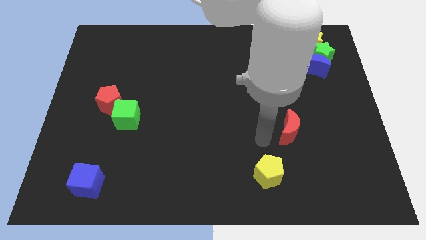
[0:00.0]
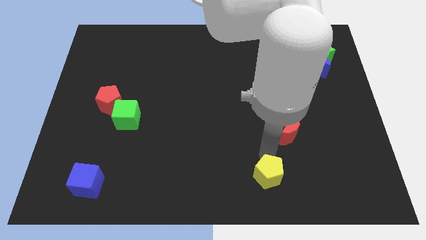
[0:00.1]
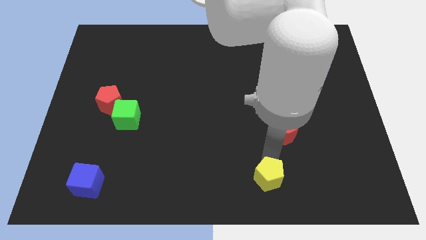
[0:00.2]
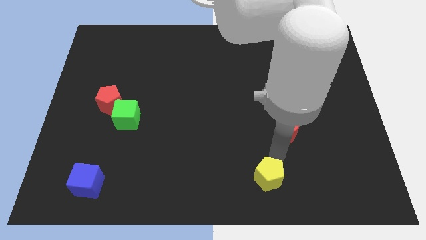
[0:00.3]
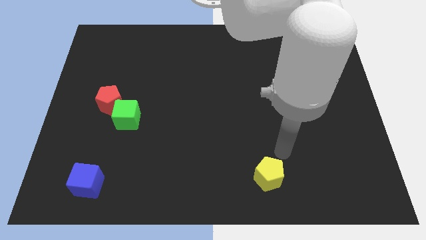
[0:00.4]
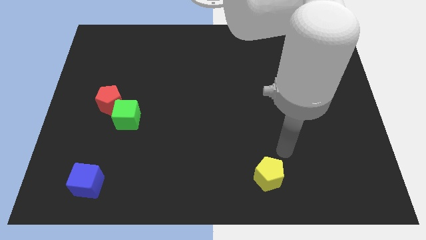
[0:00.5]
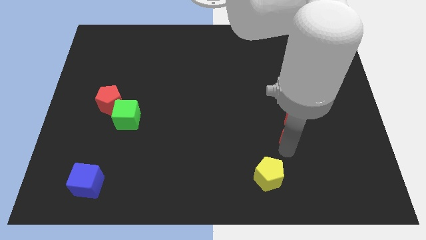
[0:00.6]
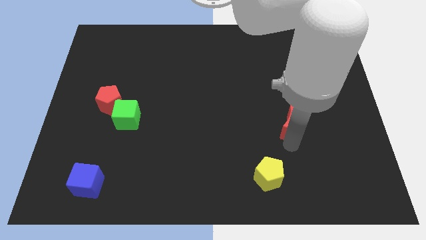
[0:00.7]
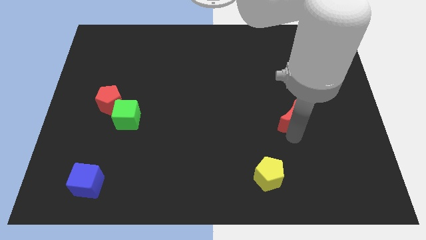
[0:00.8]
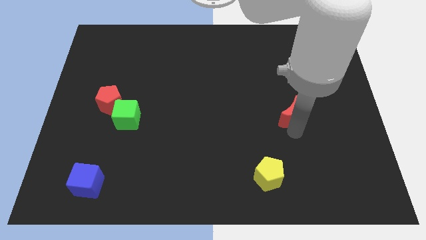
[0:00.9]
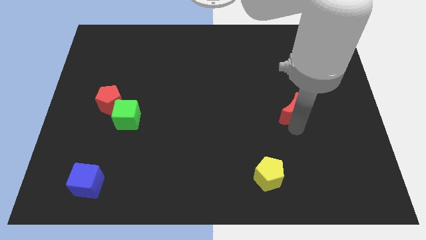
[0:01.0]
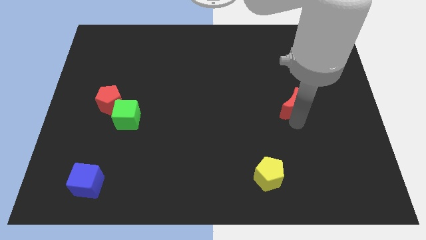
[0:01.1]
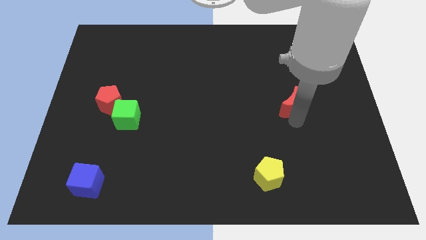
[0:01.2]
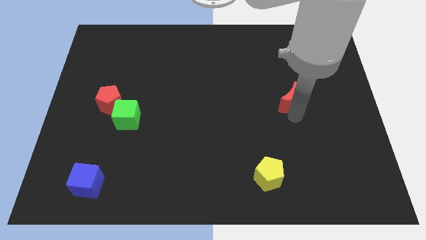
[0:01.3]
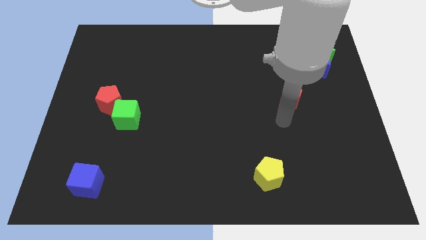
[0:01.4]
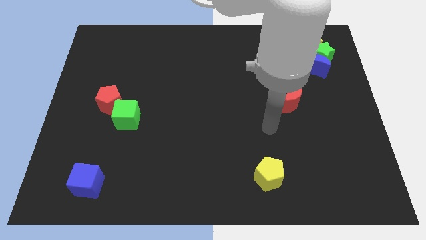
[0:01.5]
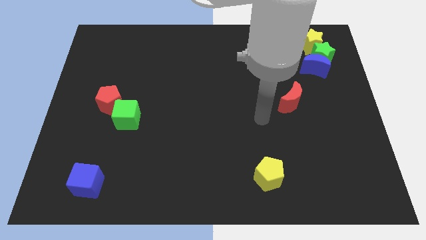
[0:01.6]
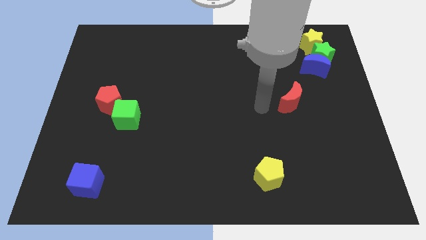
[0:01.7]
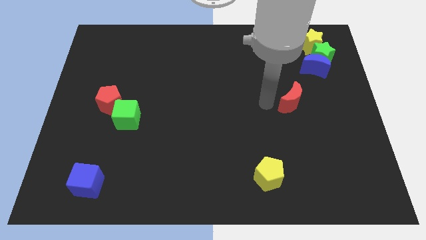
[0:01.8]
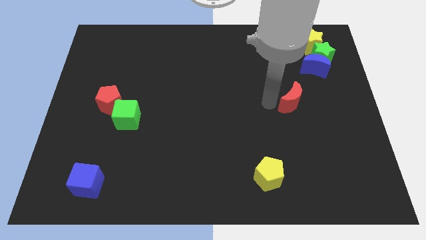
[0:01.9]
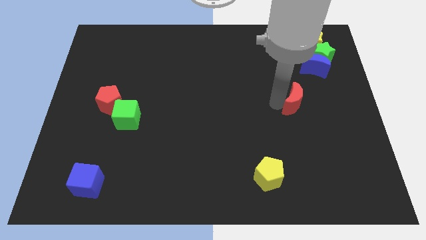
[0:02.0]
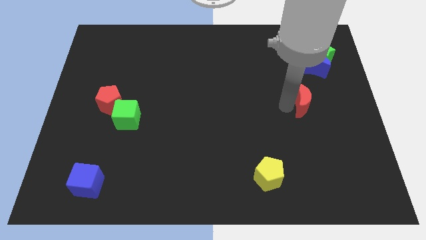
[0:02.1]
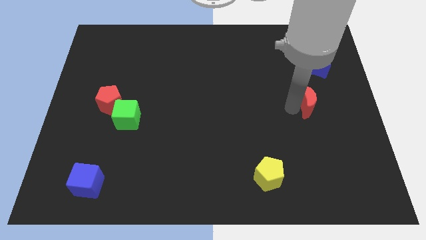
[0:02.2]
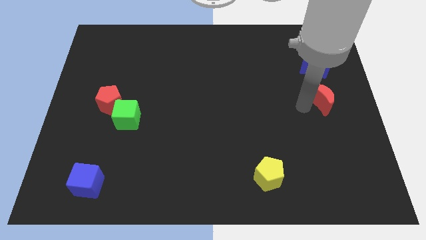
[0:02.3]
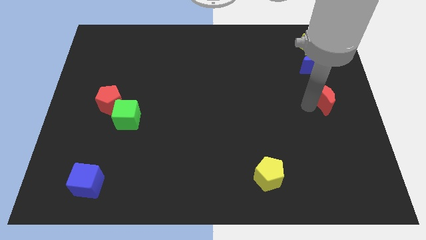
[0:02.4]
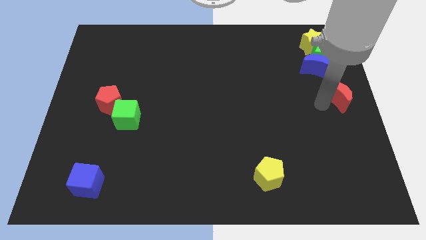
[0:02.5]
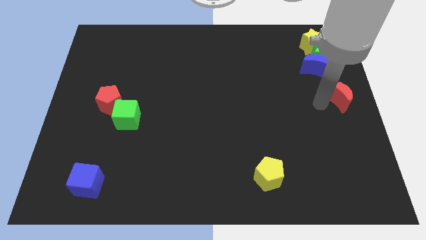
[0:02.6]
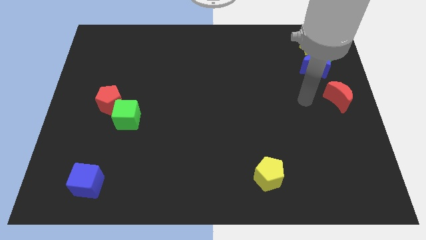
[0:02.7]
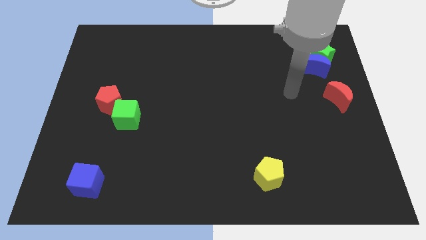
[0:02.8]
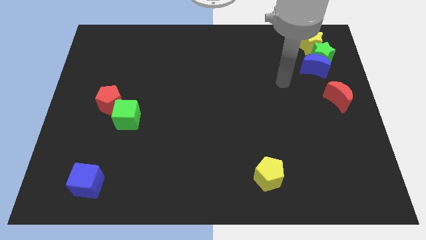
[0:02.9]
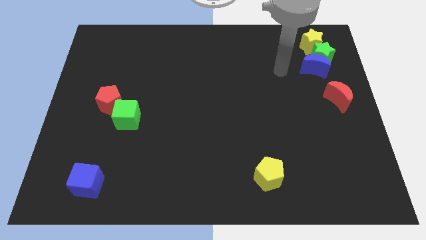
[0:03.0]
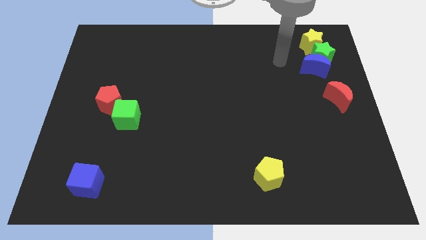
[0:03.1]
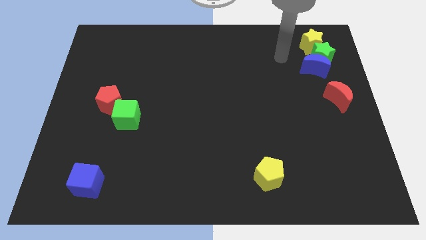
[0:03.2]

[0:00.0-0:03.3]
move red moon slightly towards the top side of the board

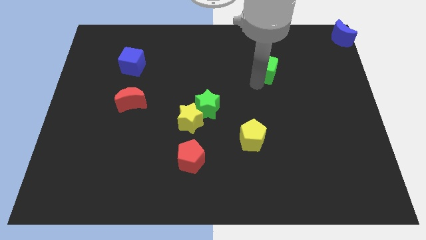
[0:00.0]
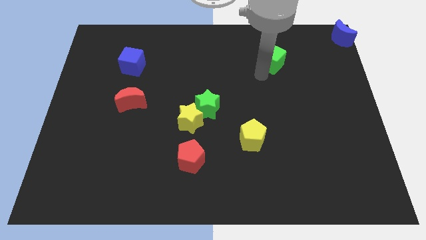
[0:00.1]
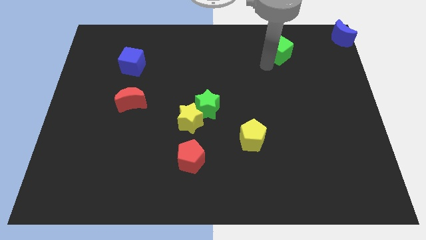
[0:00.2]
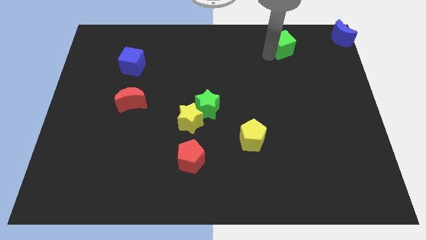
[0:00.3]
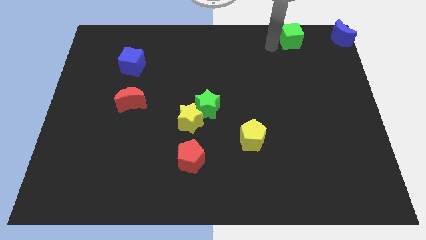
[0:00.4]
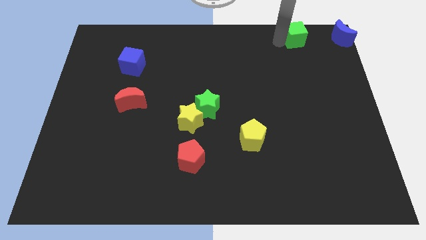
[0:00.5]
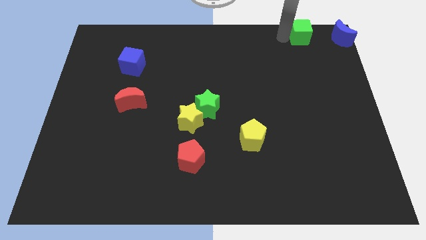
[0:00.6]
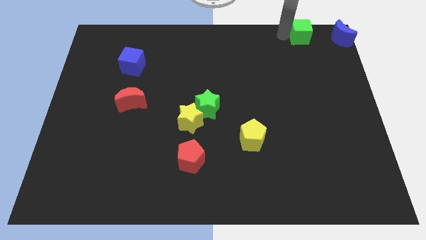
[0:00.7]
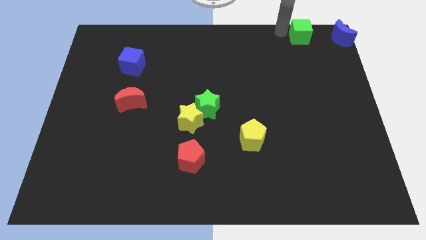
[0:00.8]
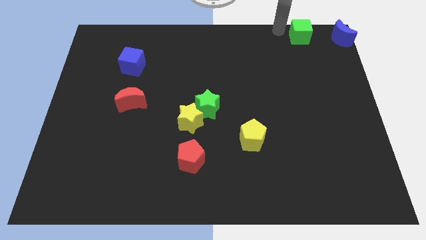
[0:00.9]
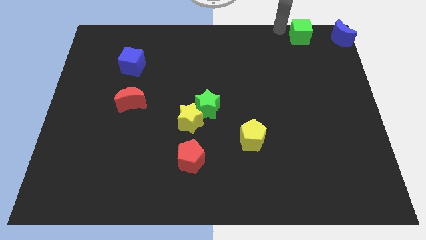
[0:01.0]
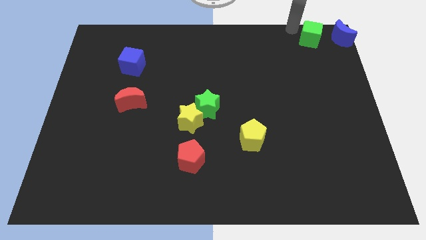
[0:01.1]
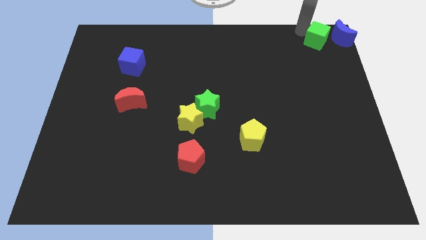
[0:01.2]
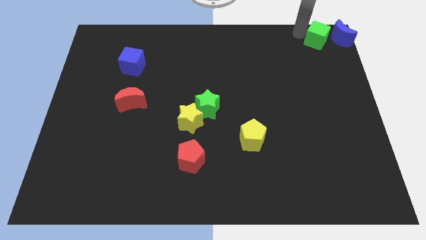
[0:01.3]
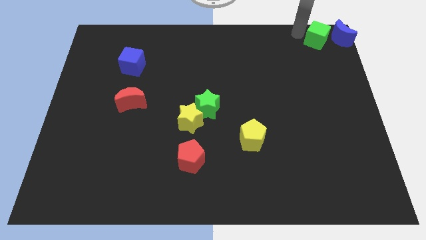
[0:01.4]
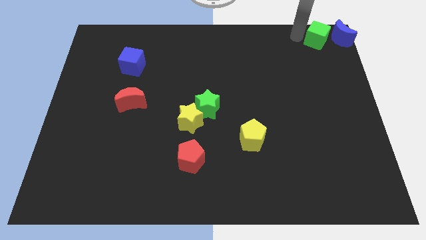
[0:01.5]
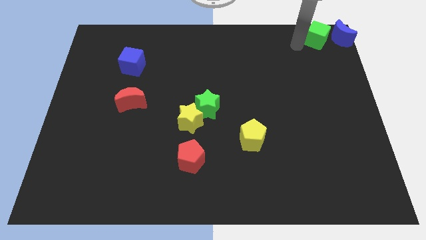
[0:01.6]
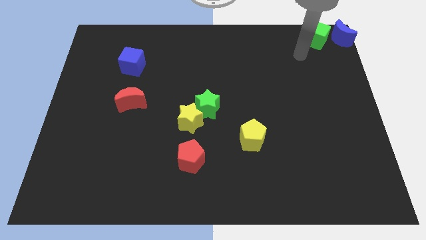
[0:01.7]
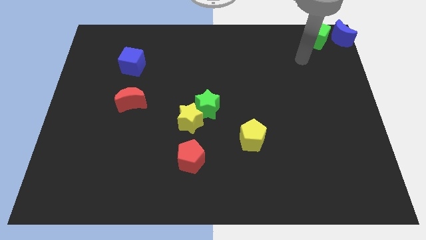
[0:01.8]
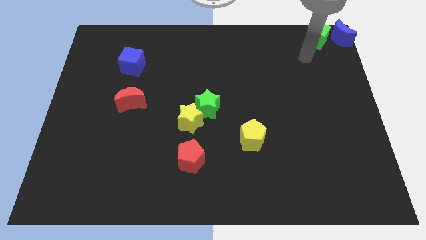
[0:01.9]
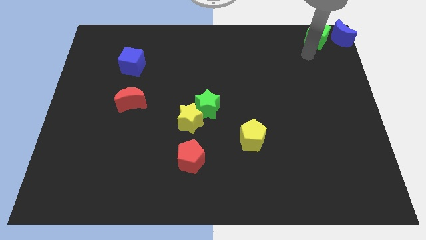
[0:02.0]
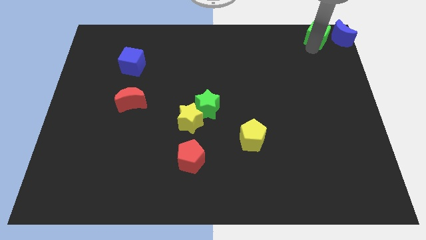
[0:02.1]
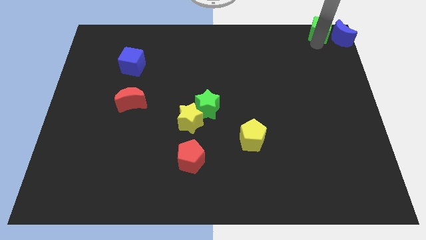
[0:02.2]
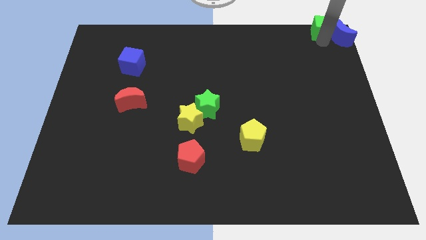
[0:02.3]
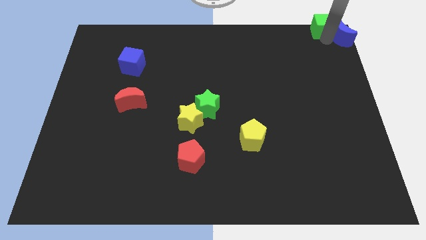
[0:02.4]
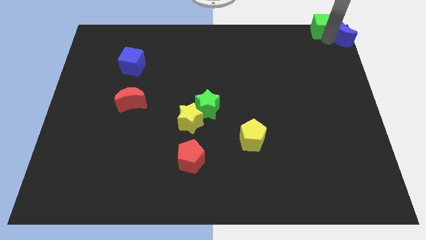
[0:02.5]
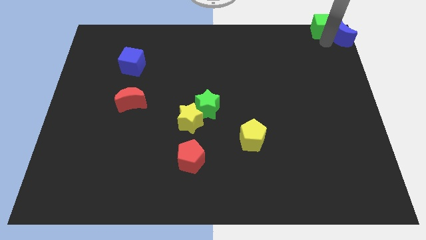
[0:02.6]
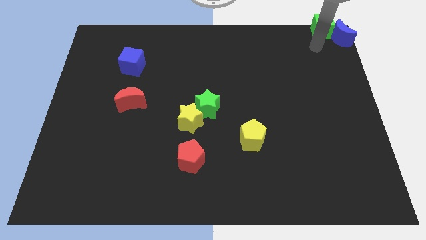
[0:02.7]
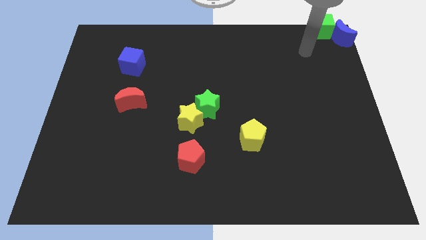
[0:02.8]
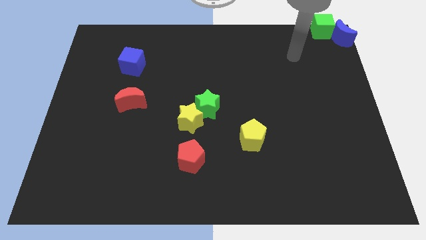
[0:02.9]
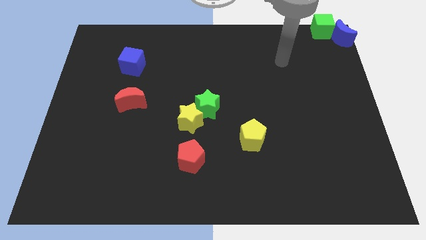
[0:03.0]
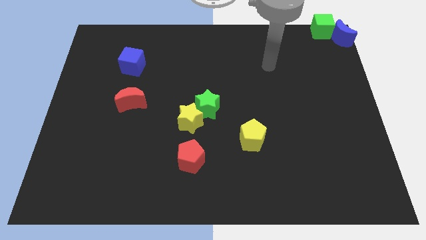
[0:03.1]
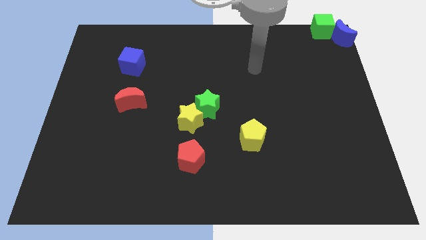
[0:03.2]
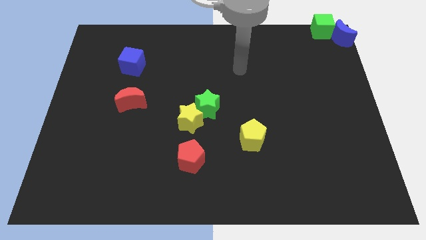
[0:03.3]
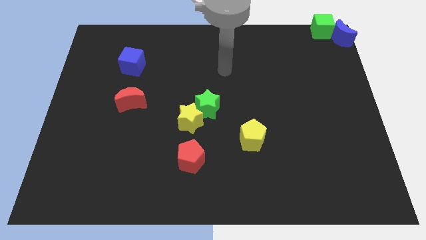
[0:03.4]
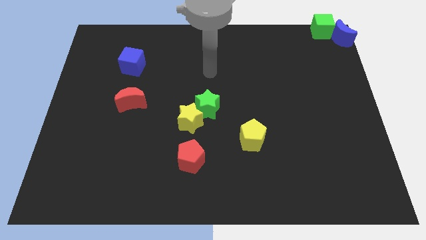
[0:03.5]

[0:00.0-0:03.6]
push the green cube into the blue crescent

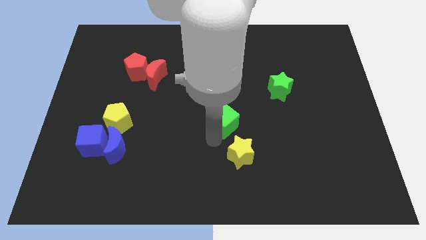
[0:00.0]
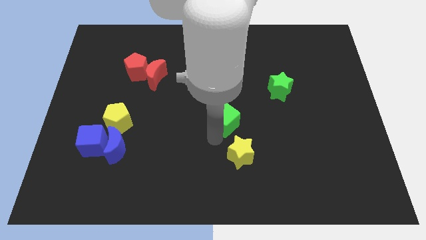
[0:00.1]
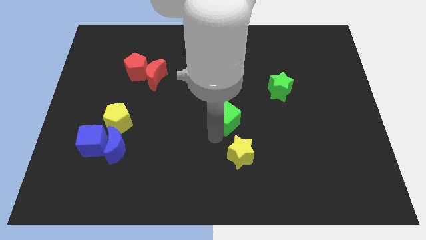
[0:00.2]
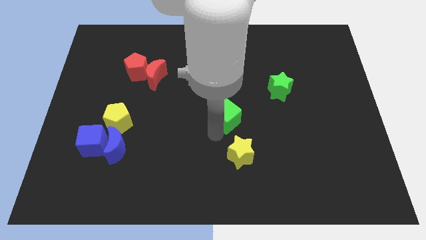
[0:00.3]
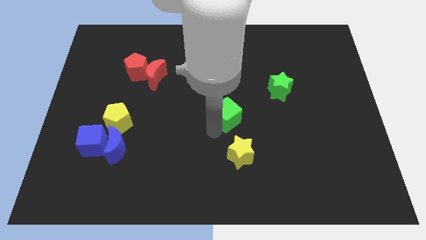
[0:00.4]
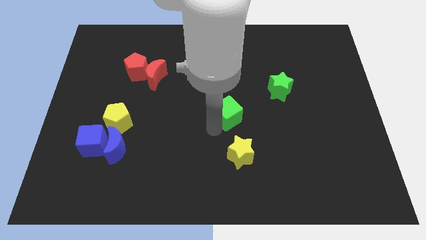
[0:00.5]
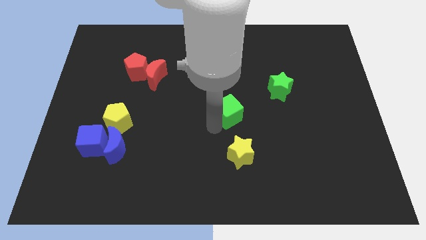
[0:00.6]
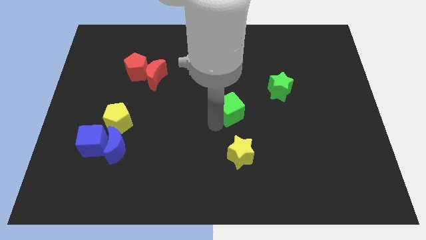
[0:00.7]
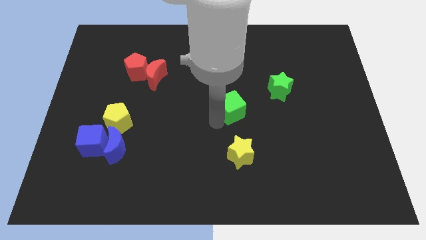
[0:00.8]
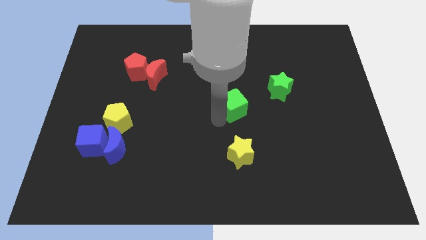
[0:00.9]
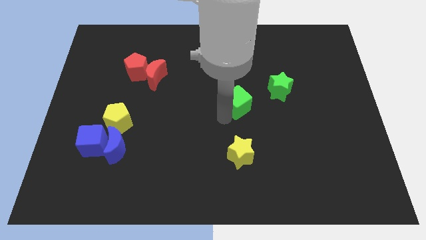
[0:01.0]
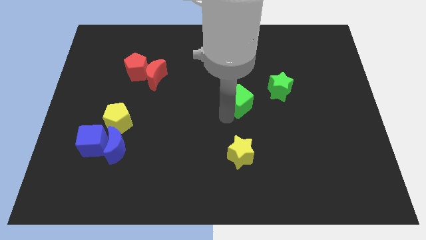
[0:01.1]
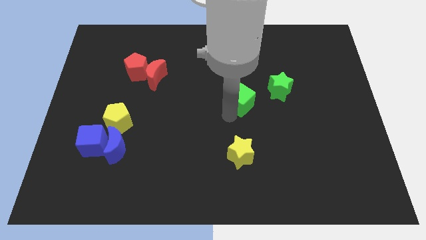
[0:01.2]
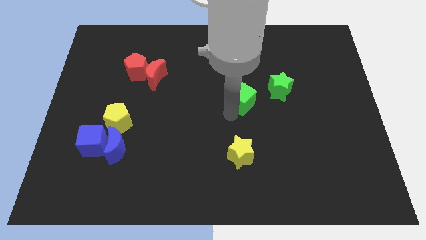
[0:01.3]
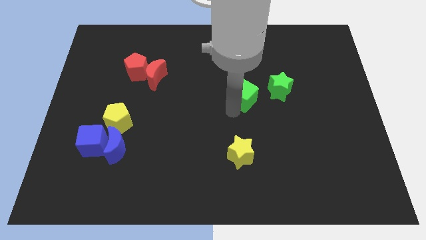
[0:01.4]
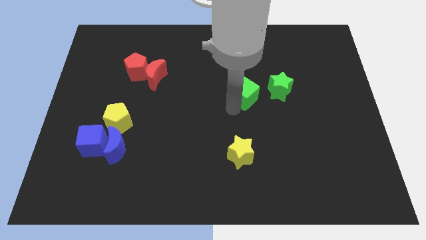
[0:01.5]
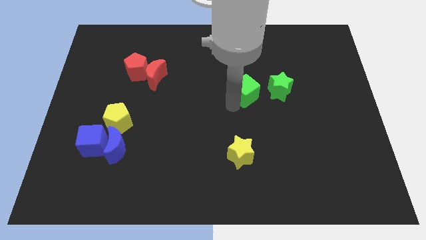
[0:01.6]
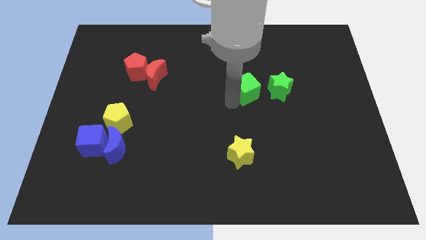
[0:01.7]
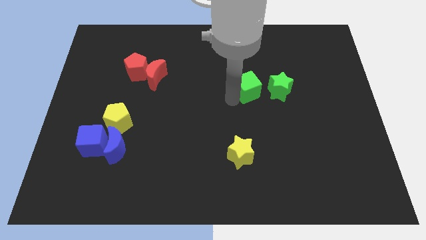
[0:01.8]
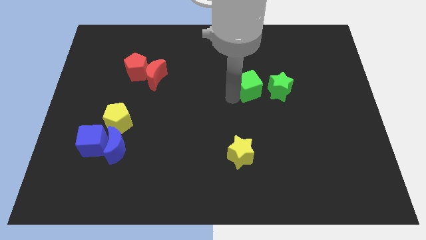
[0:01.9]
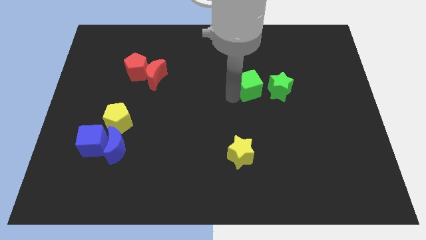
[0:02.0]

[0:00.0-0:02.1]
push the green cube to the left of the green star

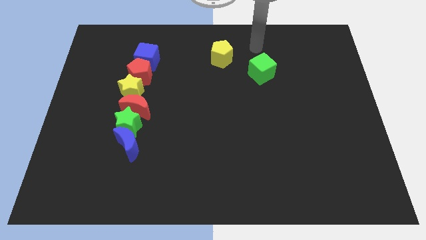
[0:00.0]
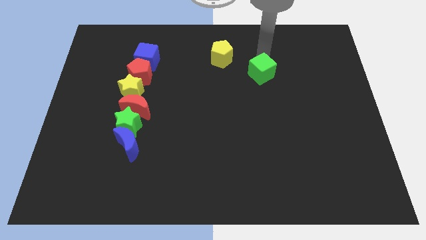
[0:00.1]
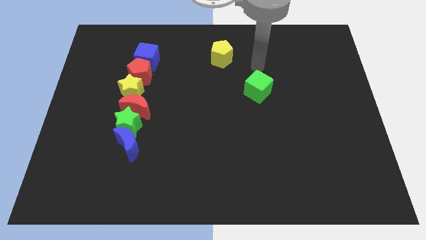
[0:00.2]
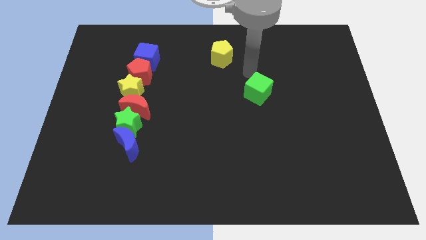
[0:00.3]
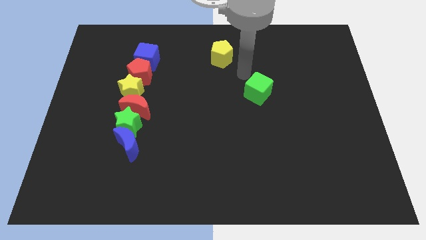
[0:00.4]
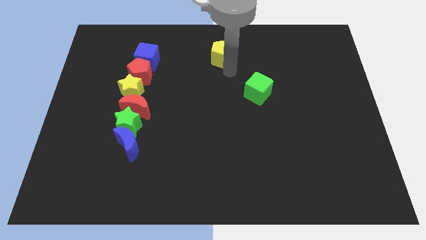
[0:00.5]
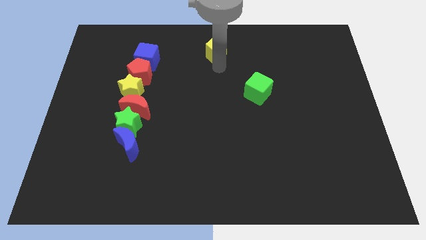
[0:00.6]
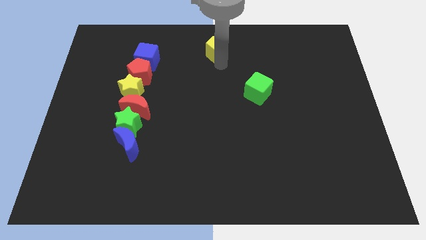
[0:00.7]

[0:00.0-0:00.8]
place the arm below the yellow pentagon
